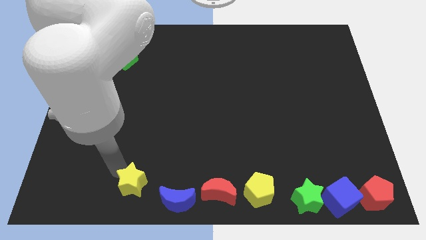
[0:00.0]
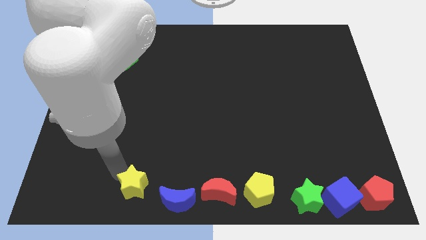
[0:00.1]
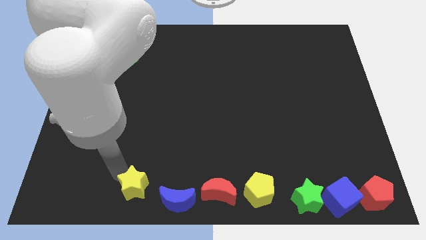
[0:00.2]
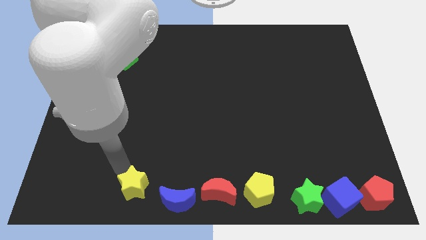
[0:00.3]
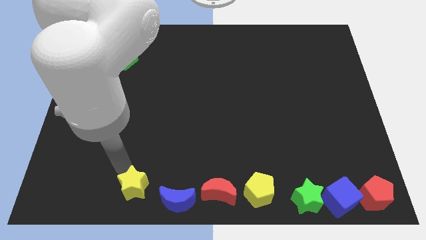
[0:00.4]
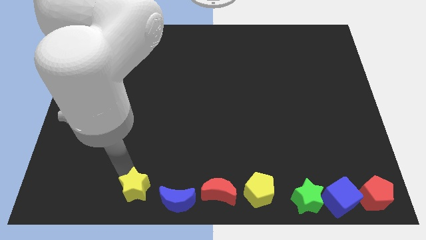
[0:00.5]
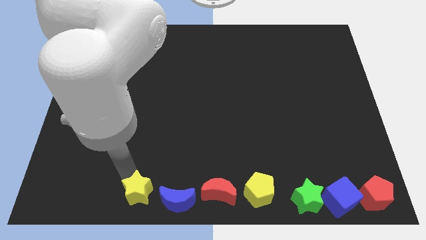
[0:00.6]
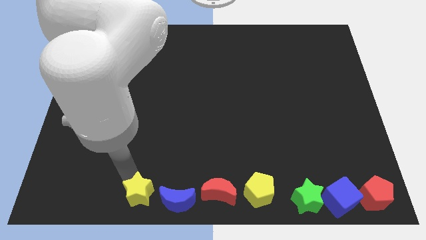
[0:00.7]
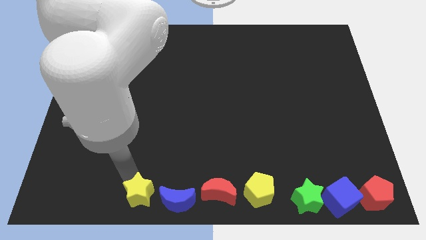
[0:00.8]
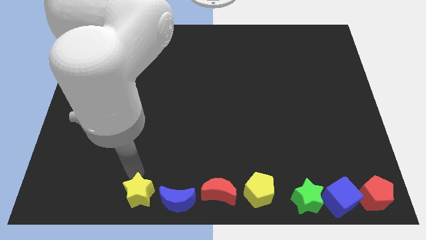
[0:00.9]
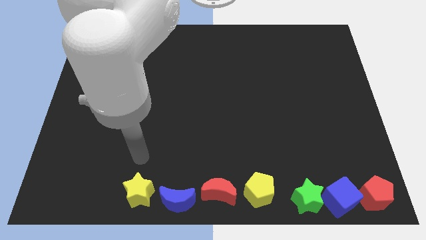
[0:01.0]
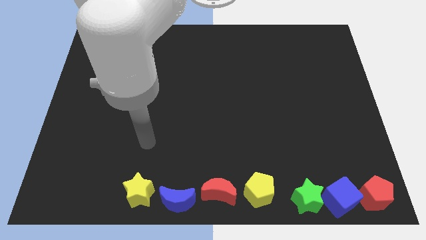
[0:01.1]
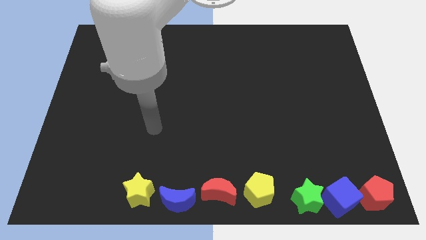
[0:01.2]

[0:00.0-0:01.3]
slightly push the yellow star to the bottom side of the board

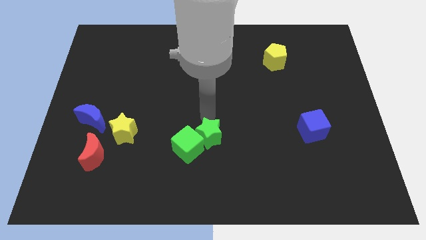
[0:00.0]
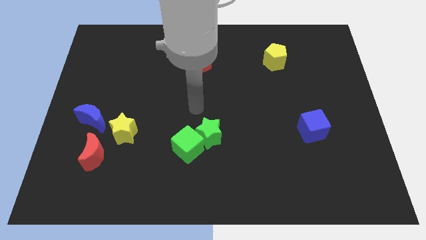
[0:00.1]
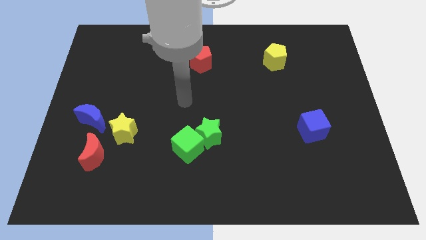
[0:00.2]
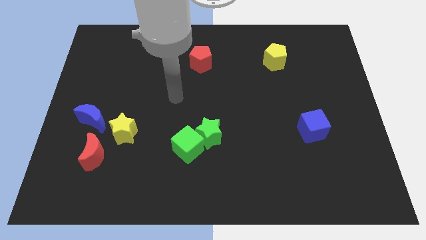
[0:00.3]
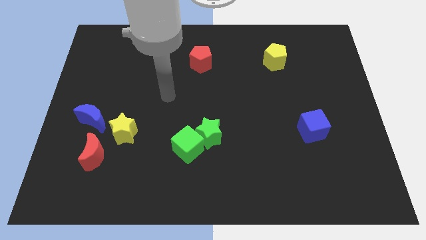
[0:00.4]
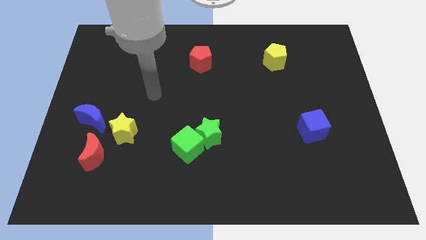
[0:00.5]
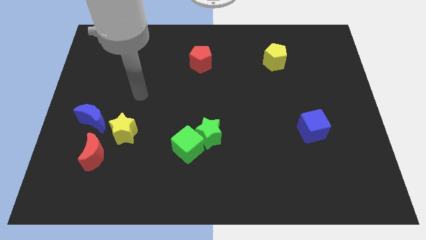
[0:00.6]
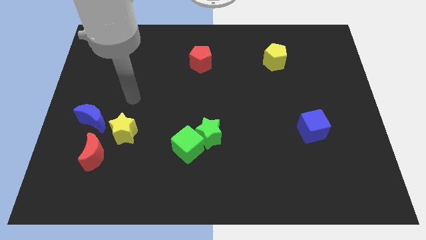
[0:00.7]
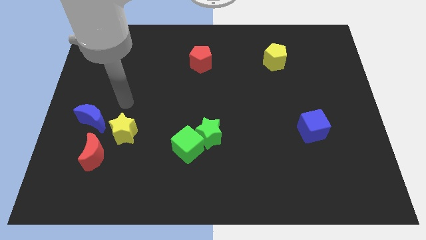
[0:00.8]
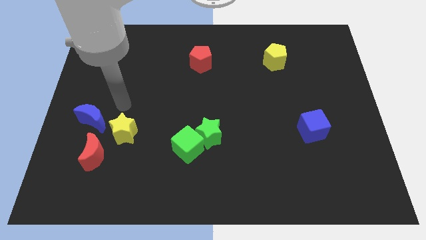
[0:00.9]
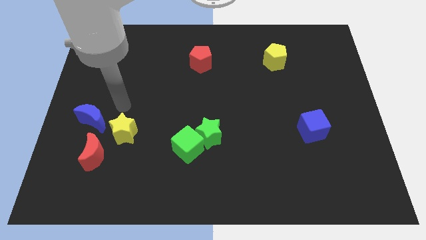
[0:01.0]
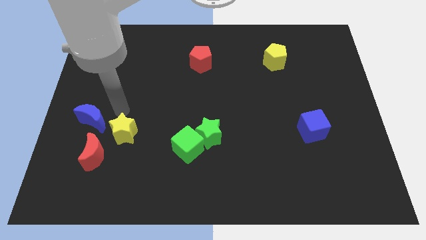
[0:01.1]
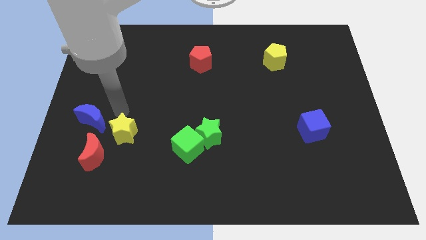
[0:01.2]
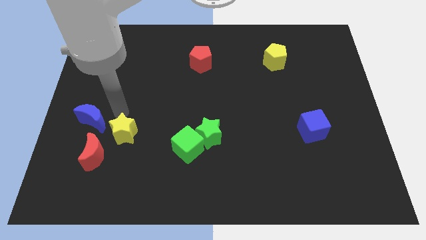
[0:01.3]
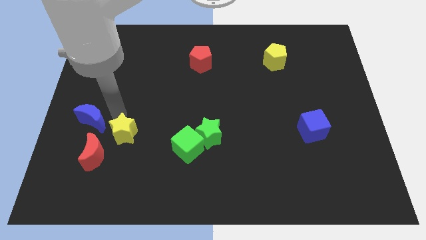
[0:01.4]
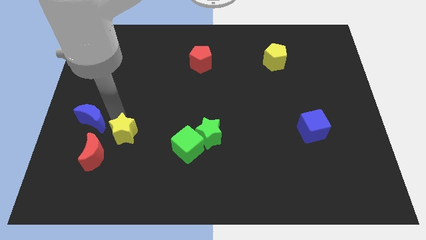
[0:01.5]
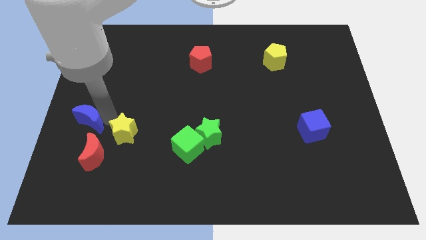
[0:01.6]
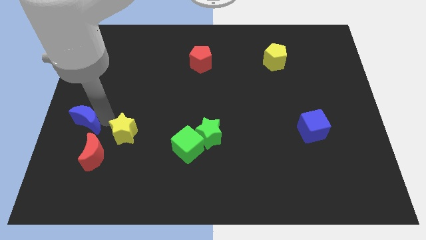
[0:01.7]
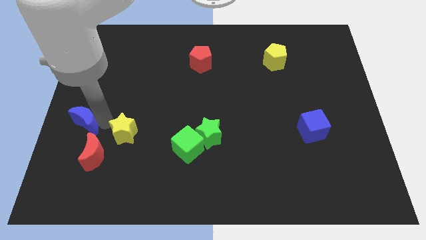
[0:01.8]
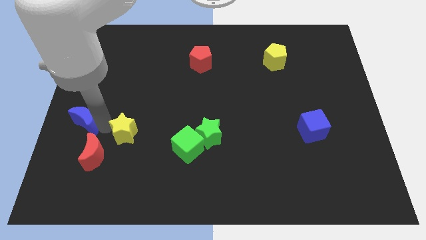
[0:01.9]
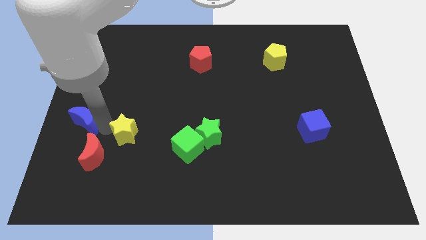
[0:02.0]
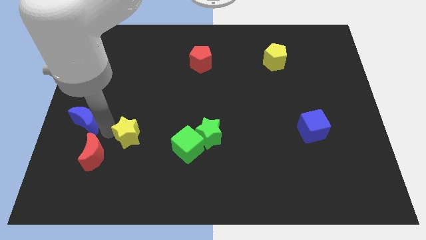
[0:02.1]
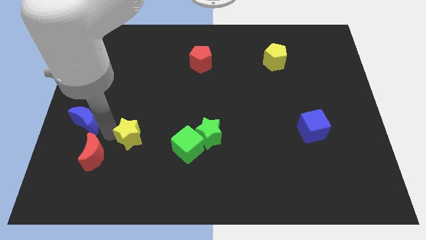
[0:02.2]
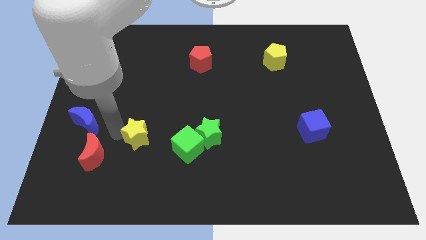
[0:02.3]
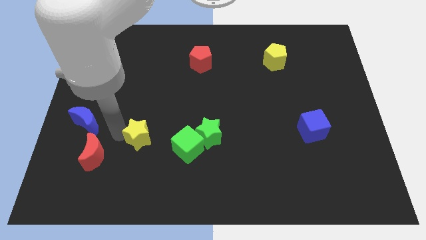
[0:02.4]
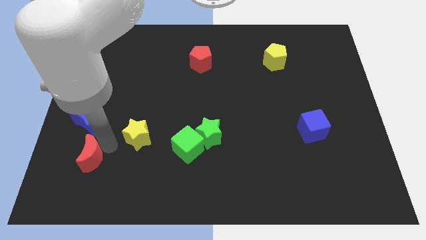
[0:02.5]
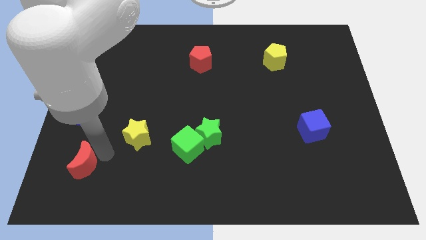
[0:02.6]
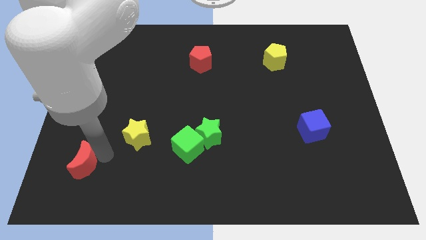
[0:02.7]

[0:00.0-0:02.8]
push the yellow star to the top right of the red crescent diagonally

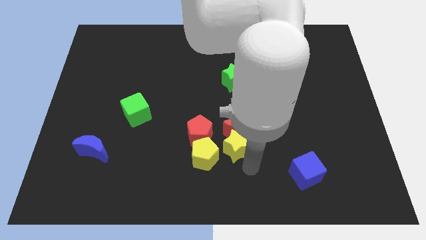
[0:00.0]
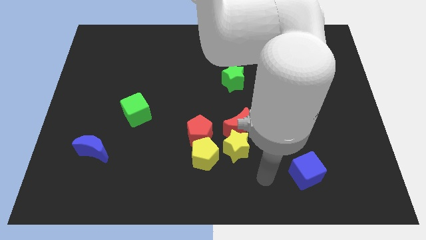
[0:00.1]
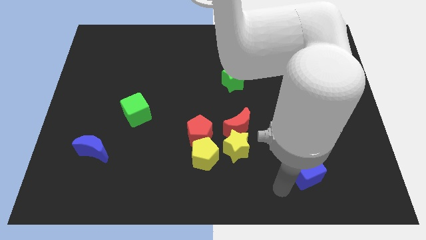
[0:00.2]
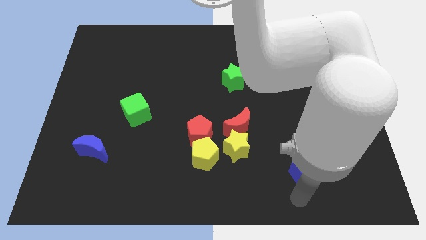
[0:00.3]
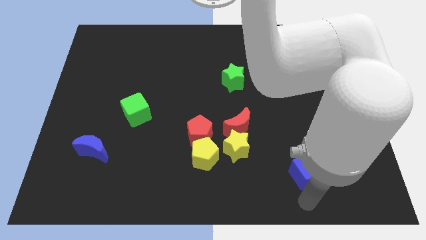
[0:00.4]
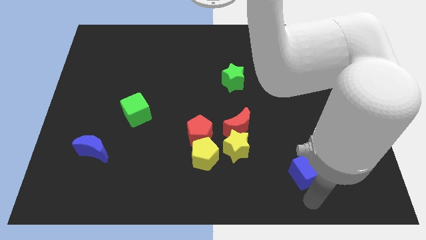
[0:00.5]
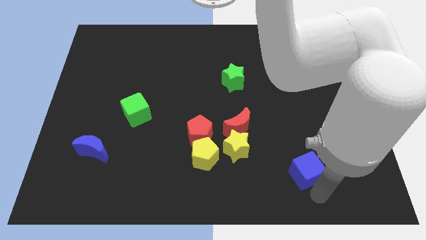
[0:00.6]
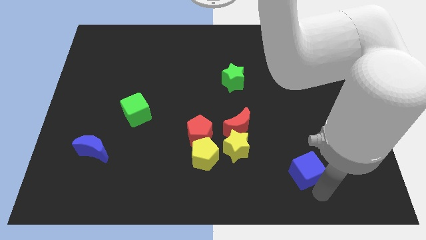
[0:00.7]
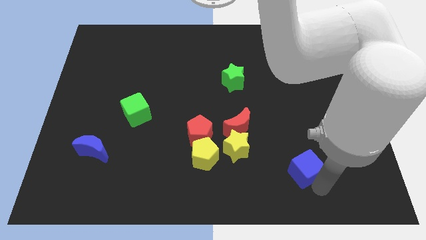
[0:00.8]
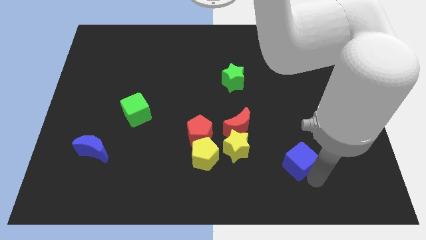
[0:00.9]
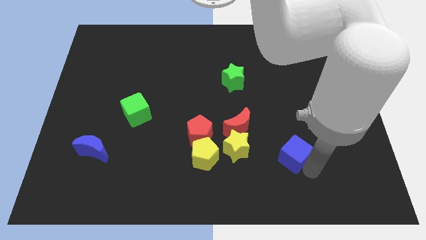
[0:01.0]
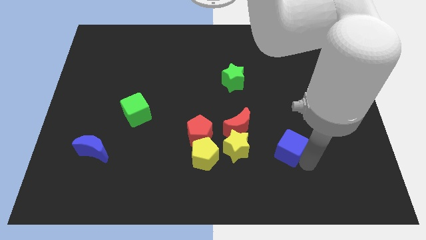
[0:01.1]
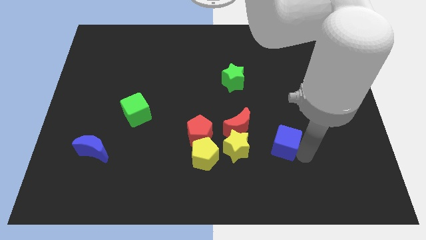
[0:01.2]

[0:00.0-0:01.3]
move the blue cube right to the yellow star

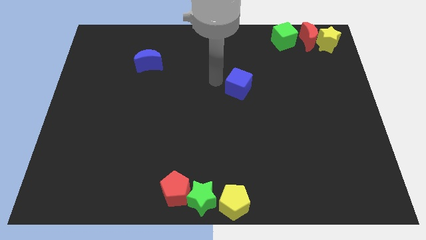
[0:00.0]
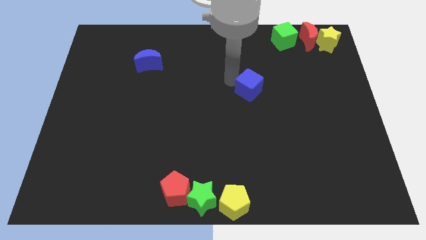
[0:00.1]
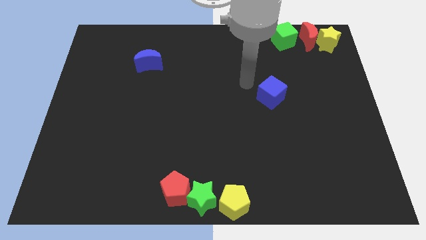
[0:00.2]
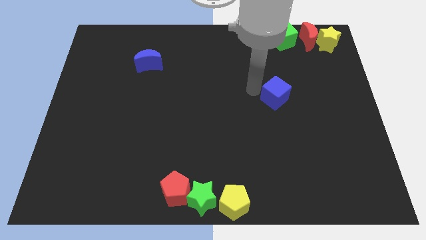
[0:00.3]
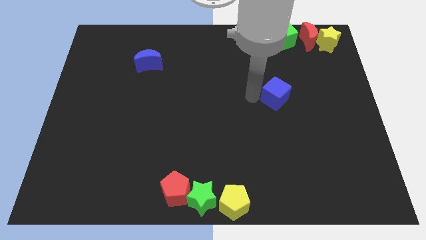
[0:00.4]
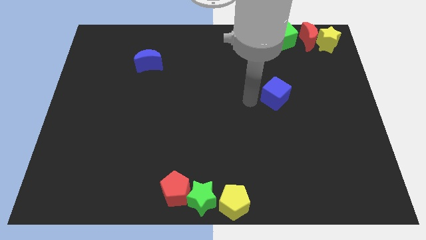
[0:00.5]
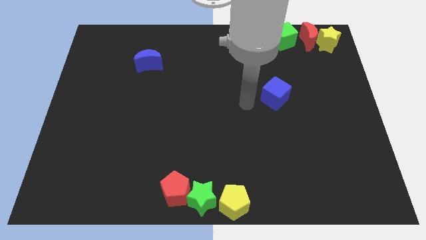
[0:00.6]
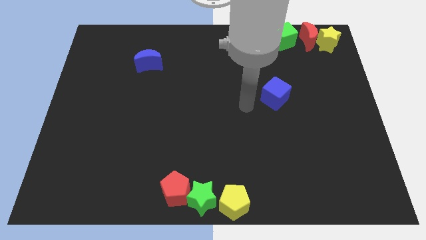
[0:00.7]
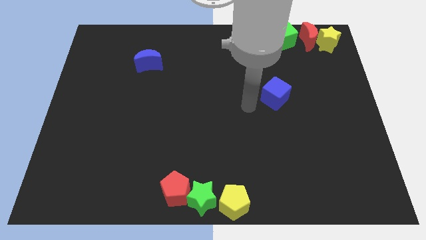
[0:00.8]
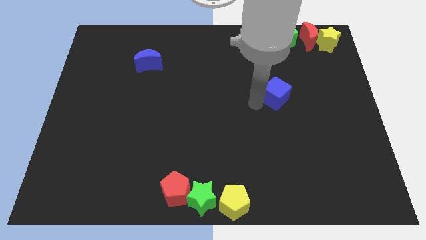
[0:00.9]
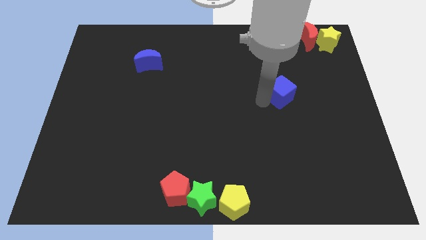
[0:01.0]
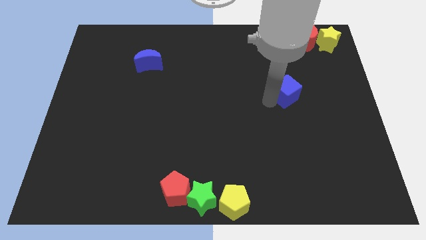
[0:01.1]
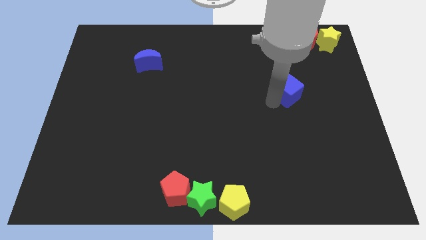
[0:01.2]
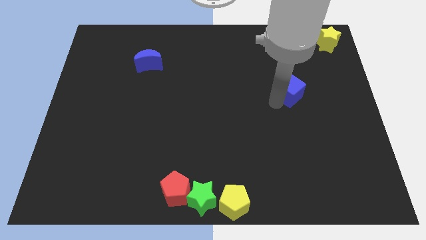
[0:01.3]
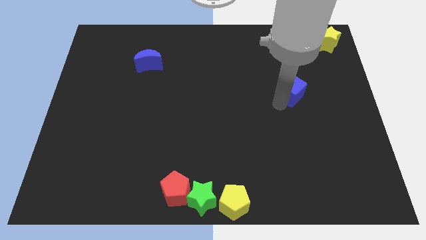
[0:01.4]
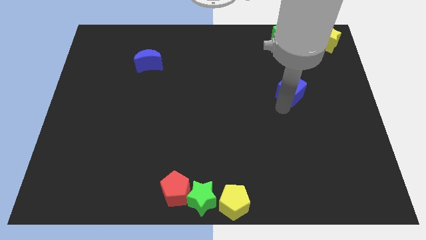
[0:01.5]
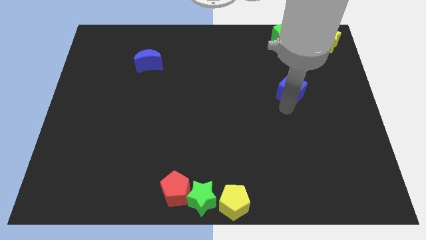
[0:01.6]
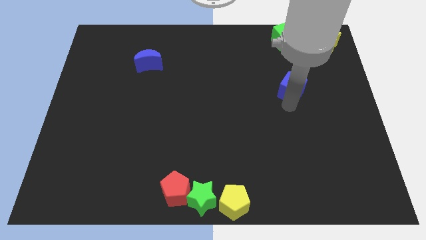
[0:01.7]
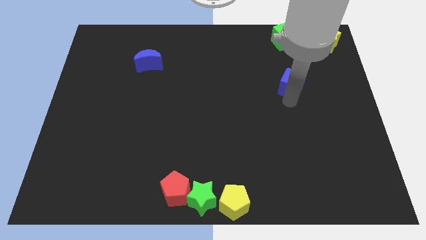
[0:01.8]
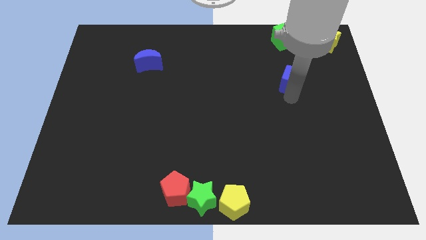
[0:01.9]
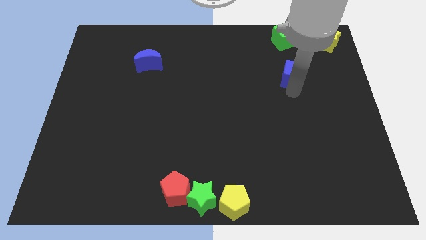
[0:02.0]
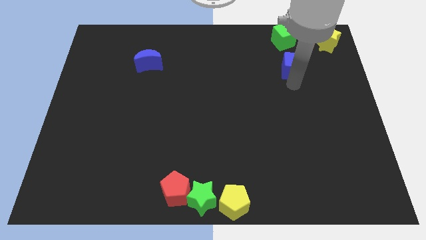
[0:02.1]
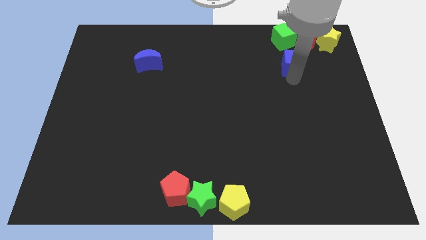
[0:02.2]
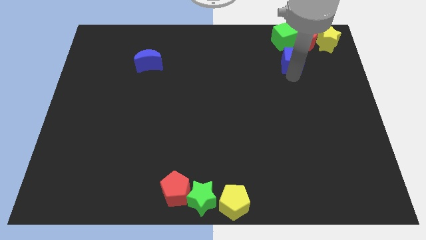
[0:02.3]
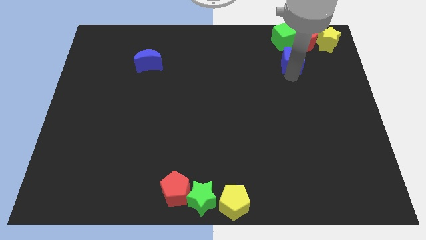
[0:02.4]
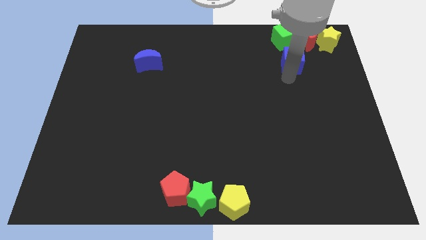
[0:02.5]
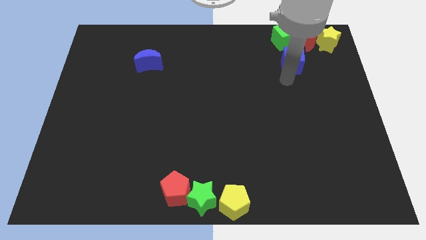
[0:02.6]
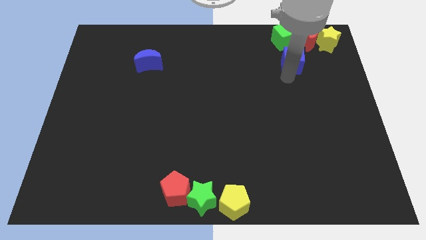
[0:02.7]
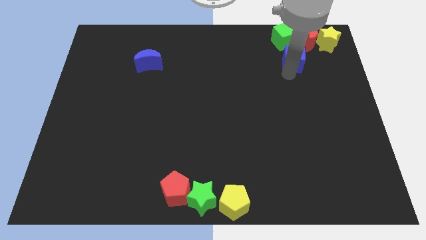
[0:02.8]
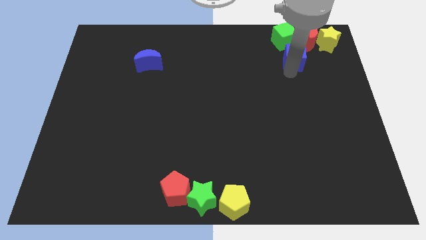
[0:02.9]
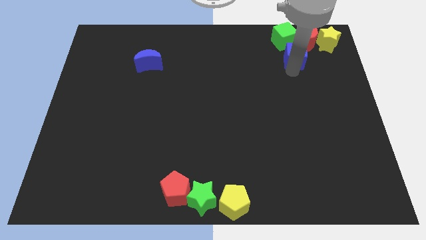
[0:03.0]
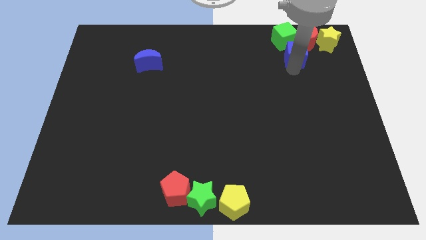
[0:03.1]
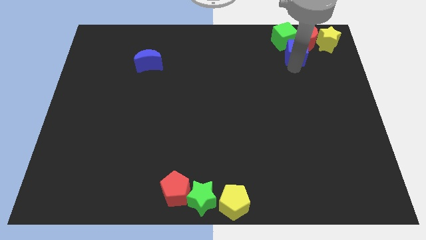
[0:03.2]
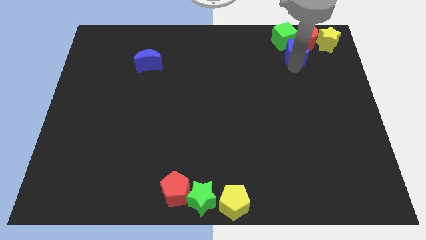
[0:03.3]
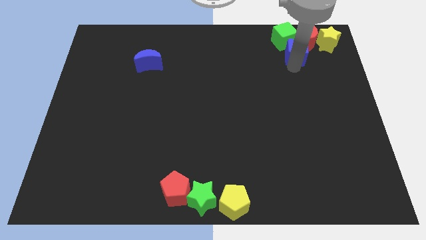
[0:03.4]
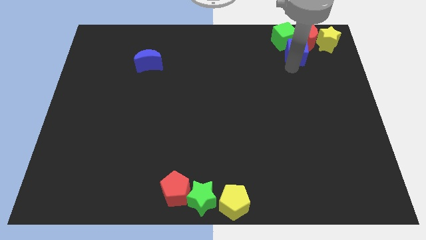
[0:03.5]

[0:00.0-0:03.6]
drag the blue cube and place it below the group of blocks
